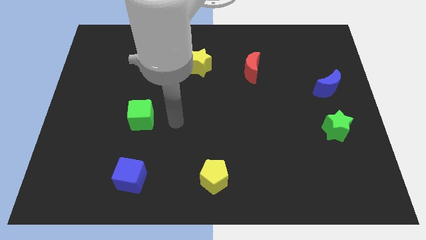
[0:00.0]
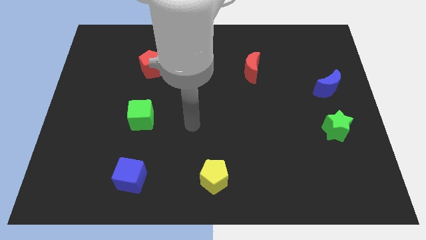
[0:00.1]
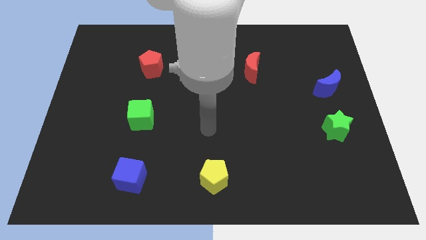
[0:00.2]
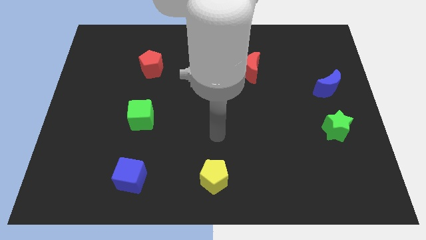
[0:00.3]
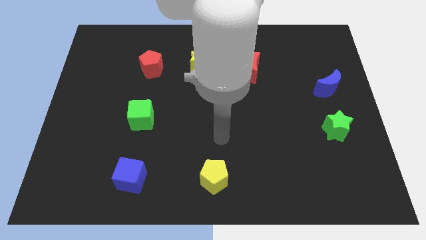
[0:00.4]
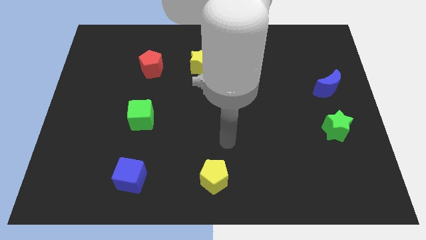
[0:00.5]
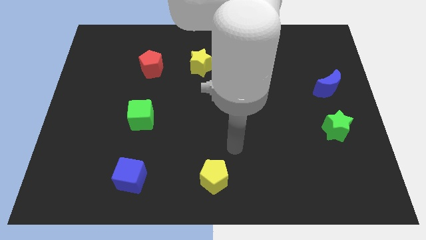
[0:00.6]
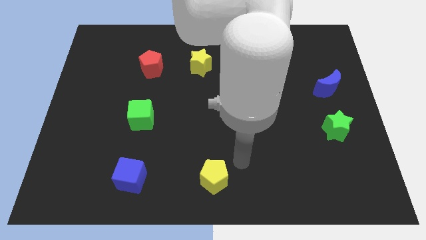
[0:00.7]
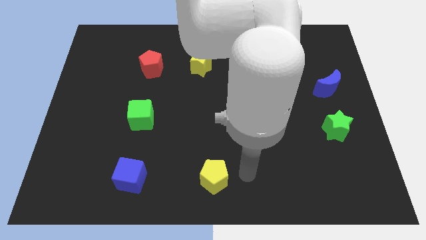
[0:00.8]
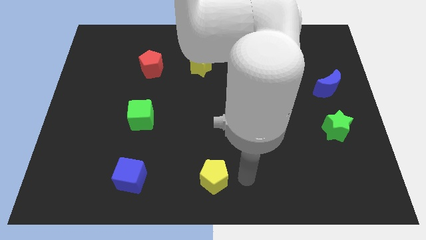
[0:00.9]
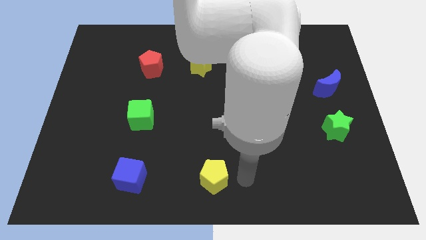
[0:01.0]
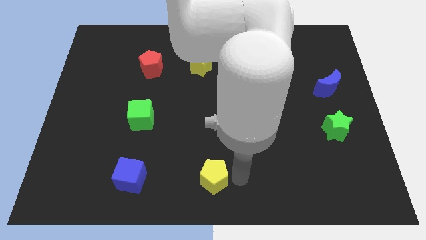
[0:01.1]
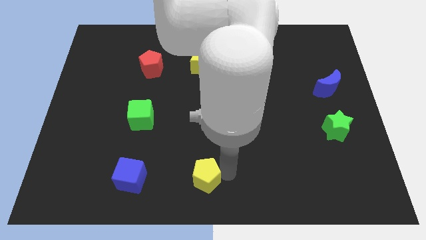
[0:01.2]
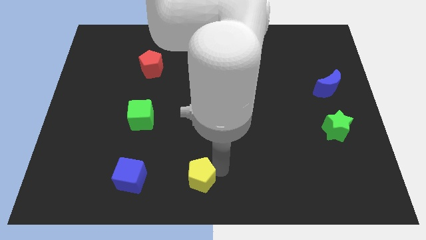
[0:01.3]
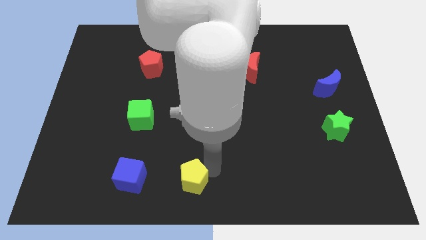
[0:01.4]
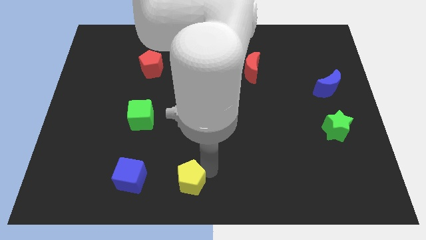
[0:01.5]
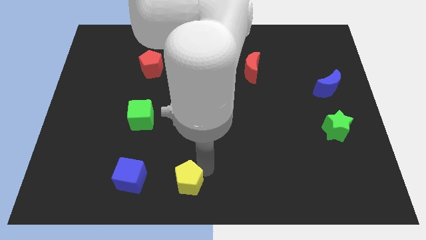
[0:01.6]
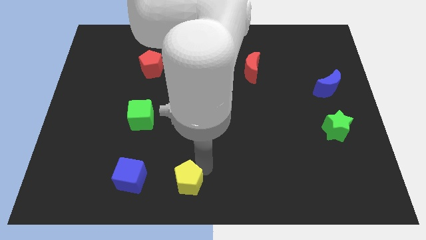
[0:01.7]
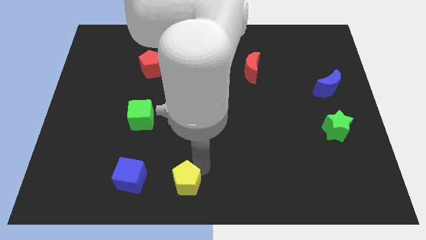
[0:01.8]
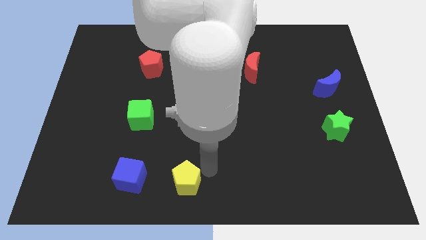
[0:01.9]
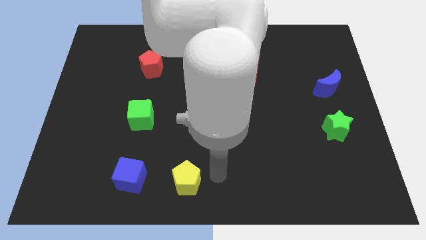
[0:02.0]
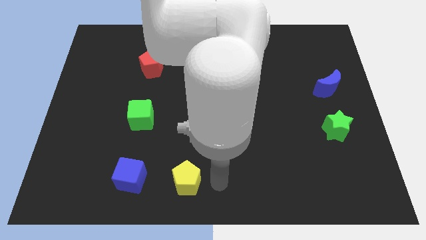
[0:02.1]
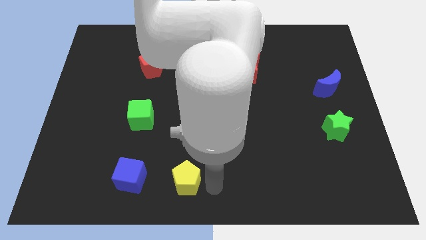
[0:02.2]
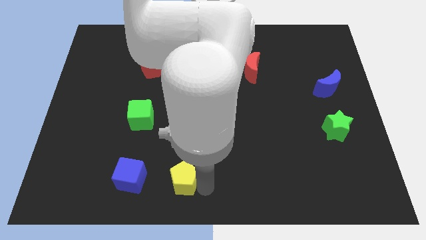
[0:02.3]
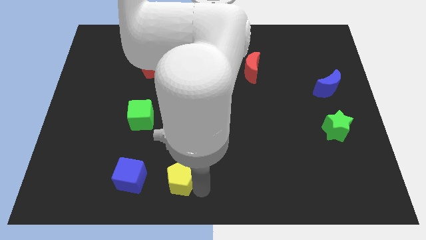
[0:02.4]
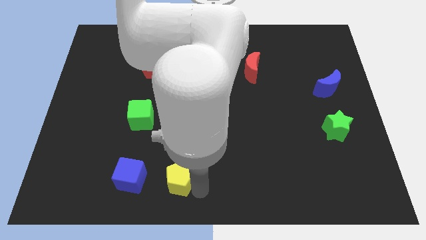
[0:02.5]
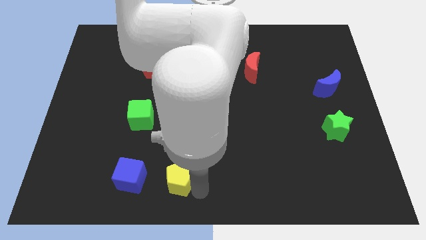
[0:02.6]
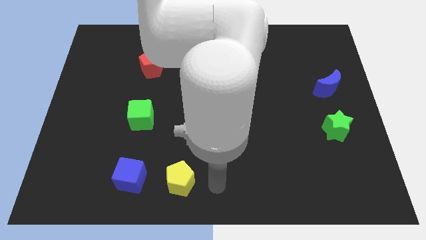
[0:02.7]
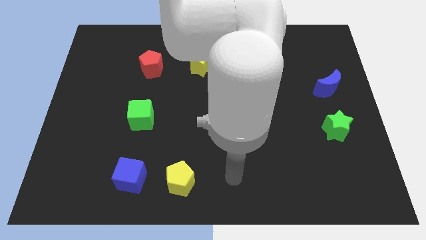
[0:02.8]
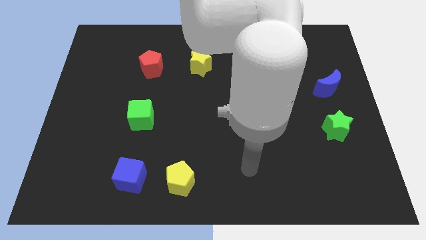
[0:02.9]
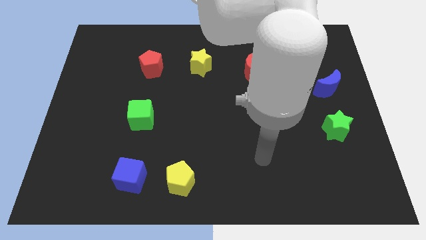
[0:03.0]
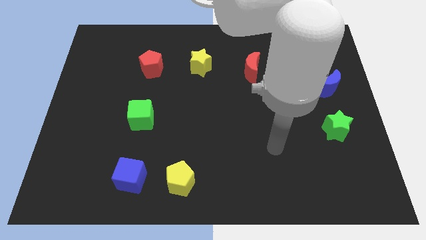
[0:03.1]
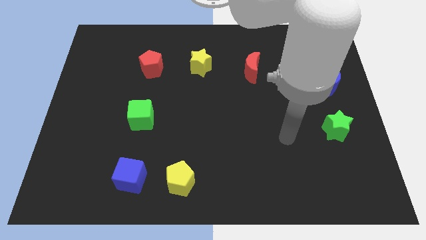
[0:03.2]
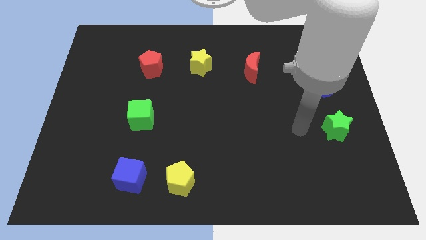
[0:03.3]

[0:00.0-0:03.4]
move the yellow pentagon close to the blue cube

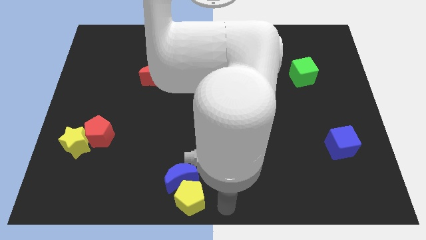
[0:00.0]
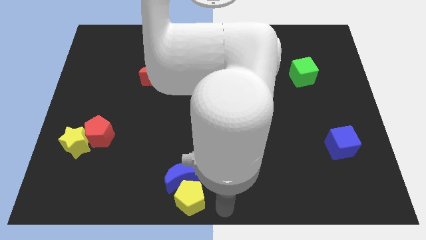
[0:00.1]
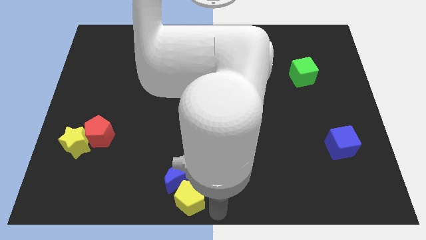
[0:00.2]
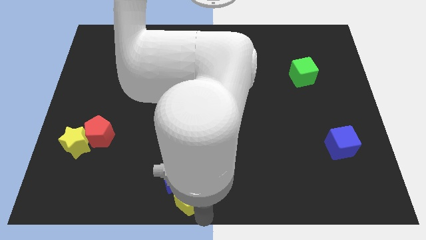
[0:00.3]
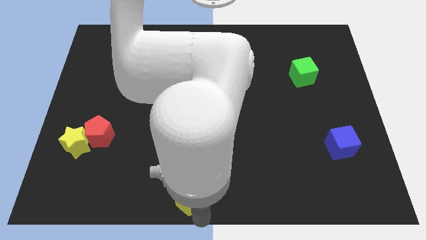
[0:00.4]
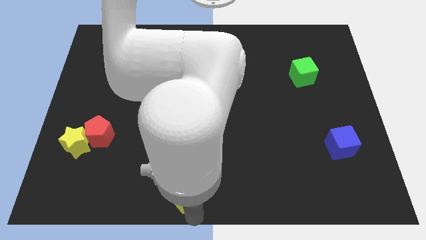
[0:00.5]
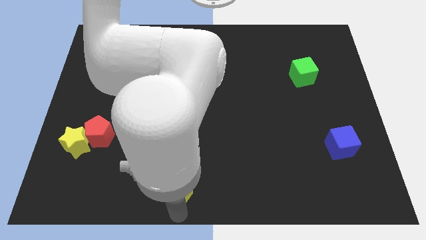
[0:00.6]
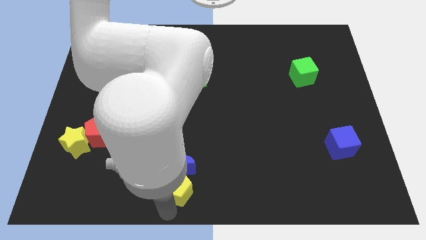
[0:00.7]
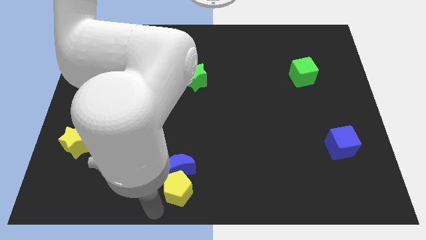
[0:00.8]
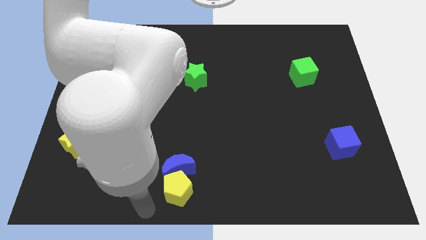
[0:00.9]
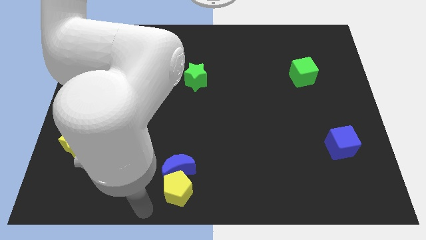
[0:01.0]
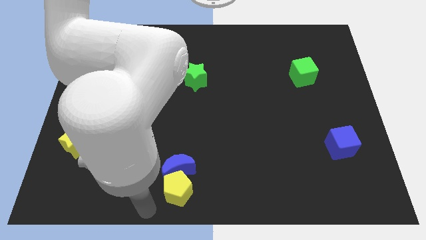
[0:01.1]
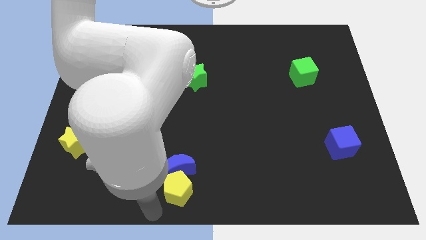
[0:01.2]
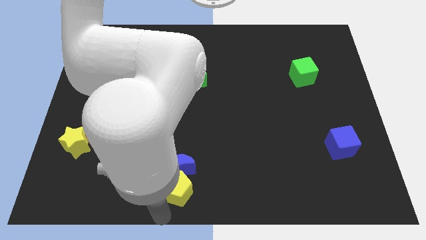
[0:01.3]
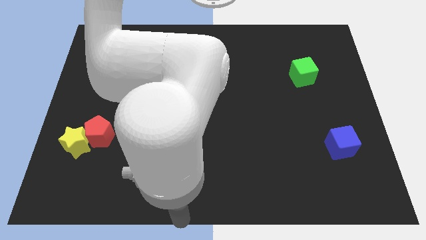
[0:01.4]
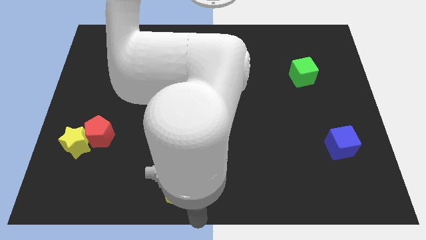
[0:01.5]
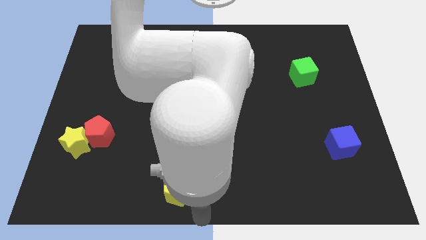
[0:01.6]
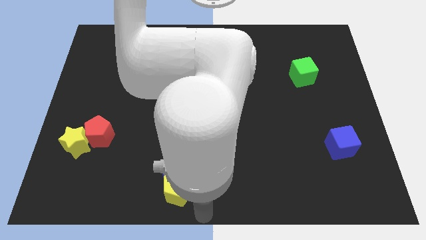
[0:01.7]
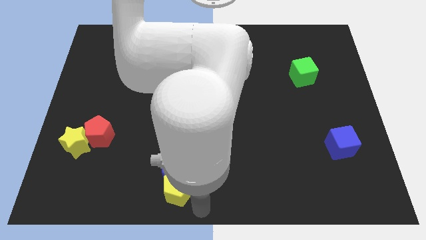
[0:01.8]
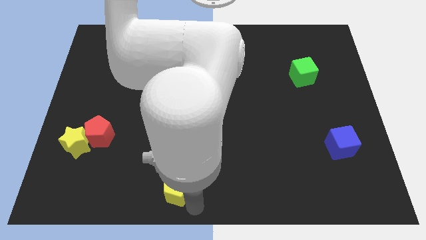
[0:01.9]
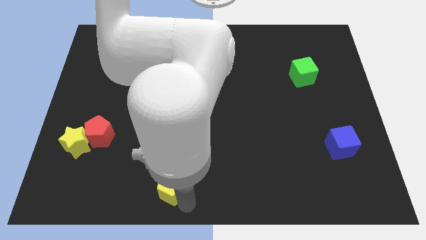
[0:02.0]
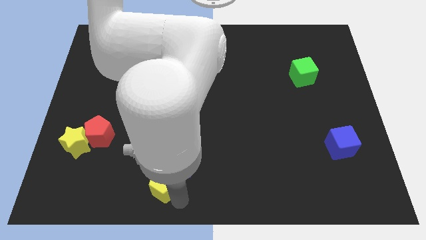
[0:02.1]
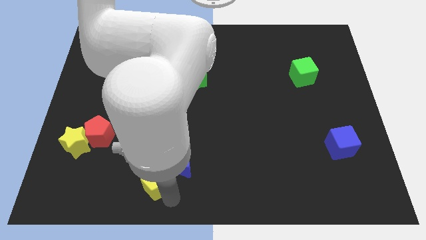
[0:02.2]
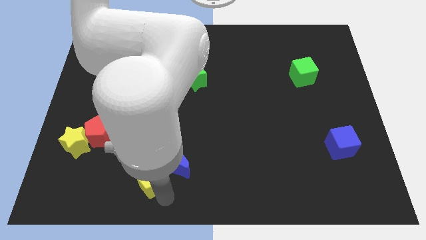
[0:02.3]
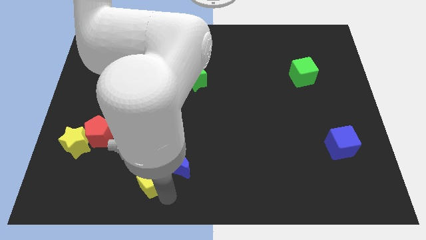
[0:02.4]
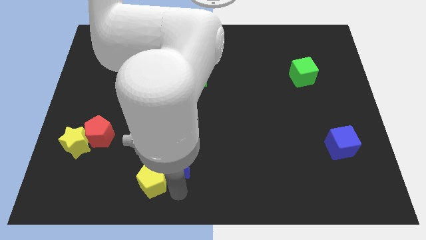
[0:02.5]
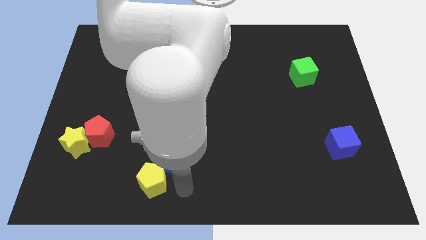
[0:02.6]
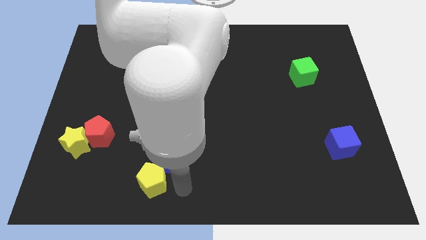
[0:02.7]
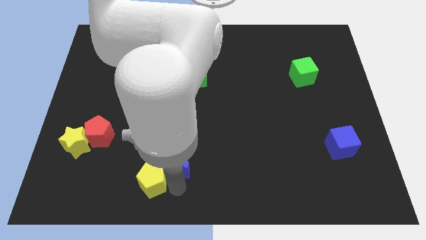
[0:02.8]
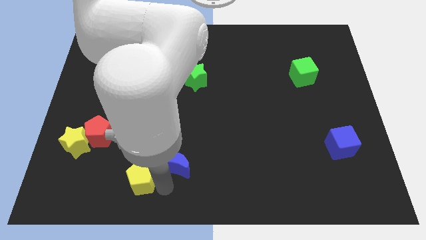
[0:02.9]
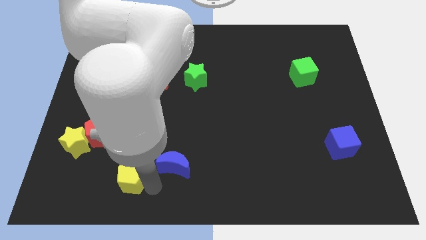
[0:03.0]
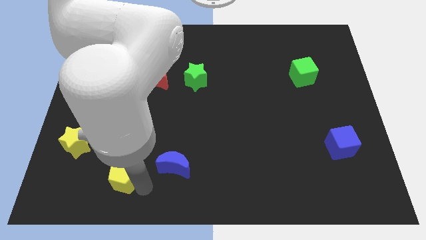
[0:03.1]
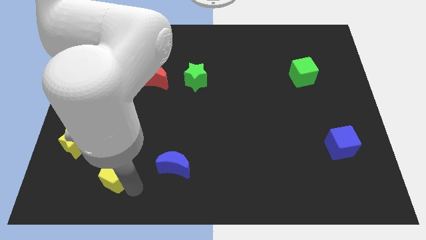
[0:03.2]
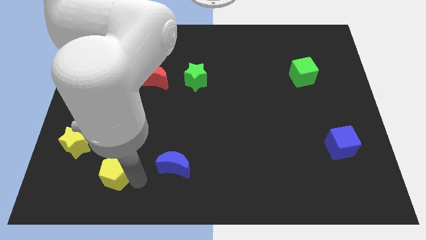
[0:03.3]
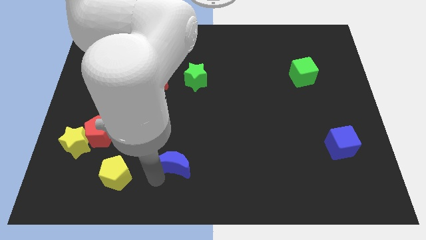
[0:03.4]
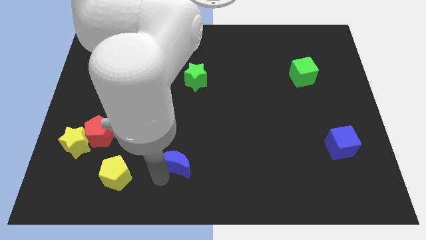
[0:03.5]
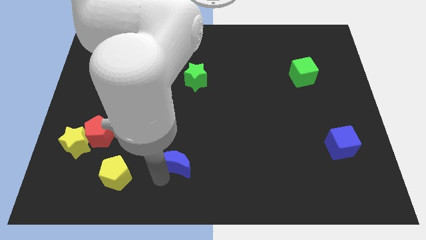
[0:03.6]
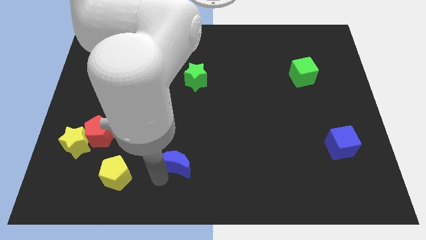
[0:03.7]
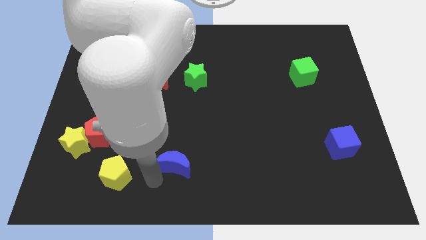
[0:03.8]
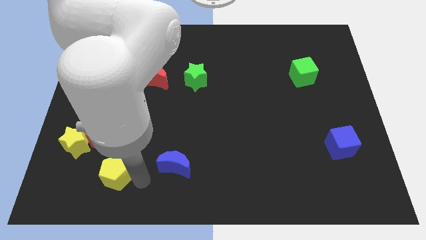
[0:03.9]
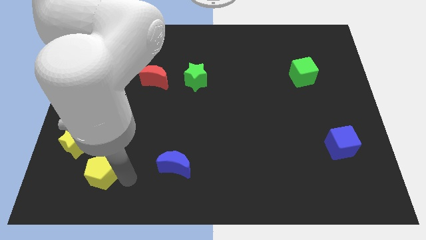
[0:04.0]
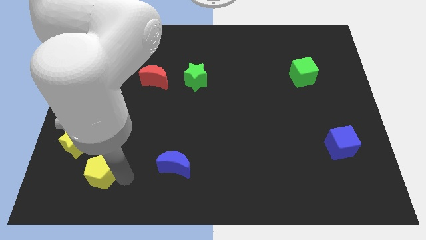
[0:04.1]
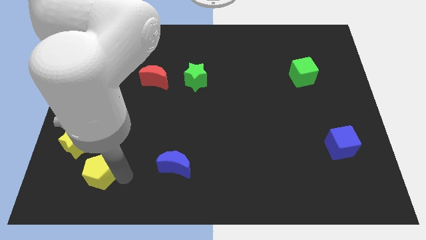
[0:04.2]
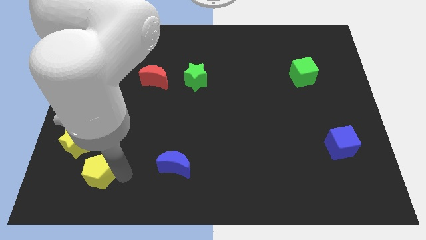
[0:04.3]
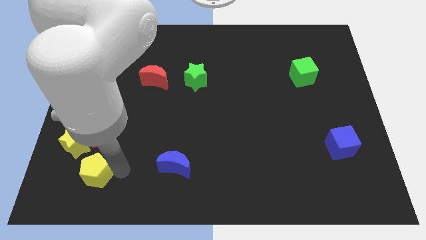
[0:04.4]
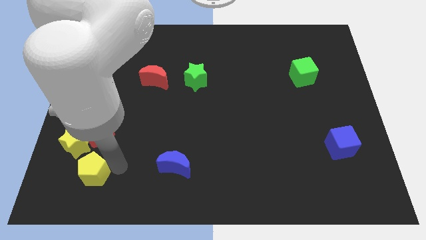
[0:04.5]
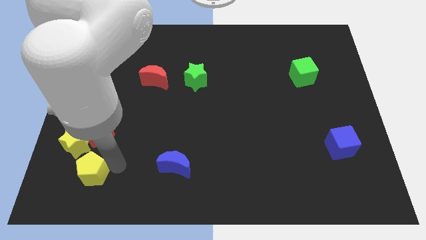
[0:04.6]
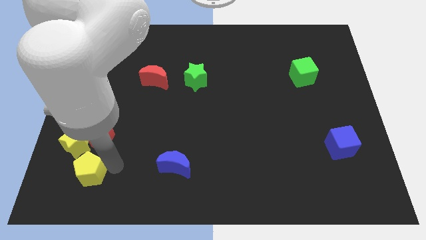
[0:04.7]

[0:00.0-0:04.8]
move the yellow pentagon to the bottom of the red pentagon

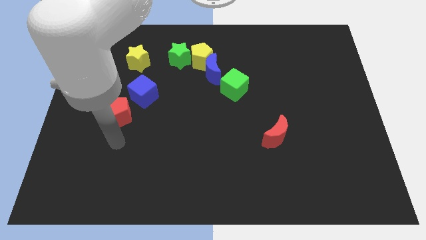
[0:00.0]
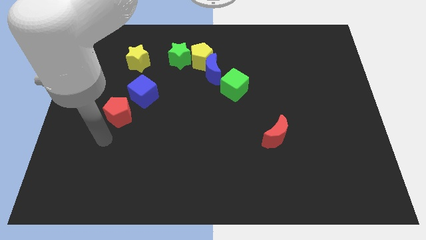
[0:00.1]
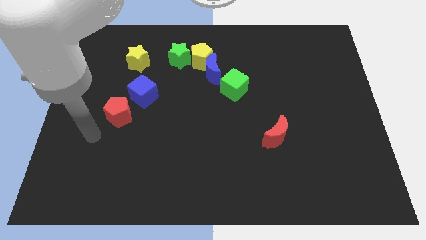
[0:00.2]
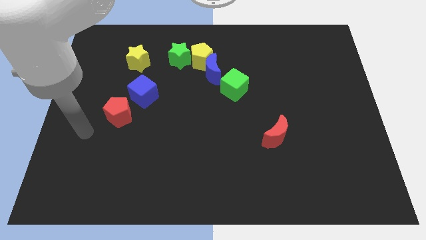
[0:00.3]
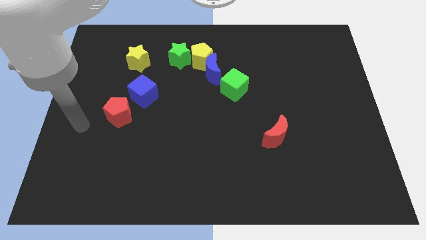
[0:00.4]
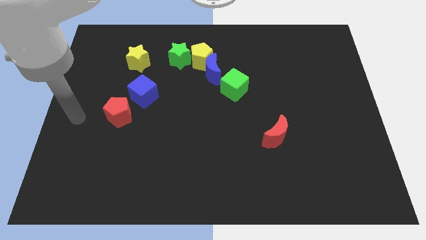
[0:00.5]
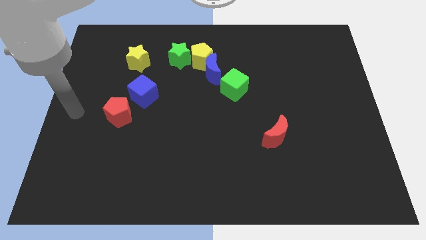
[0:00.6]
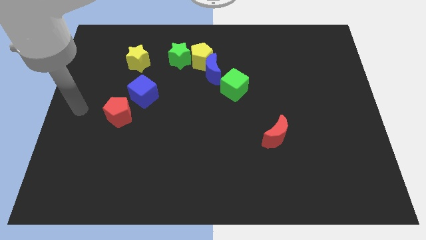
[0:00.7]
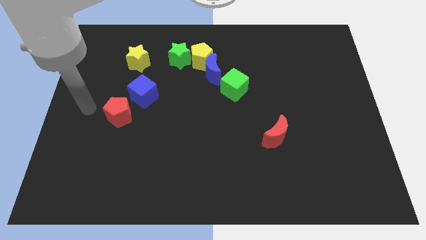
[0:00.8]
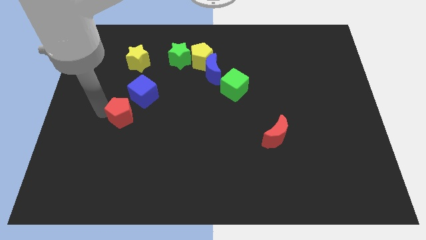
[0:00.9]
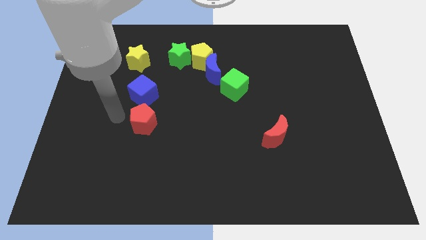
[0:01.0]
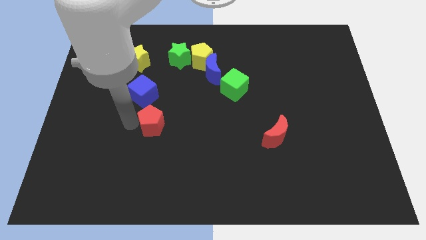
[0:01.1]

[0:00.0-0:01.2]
slide the red pentagon vertically below the blue cube
